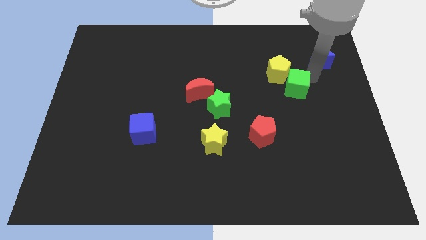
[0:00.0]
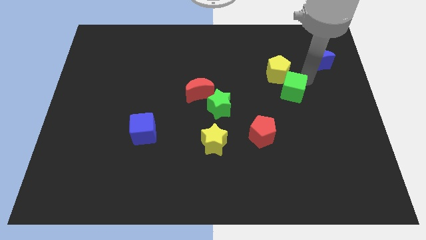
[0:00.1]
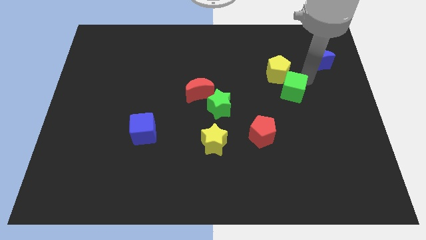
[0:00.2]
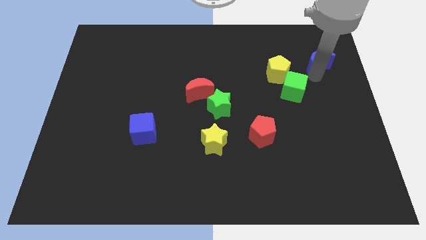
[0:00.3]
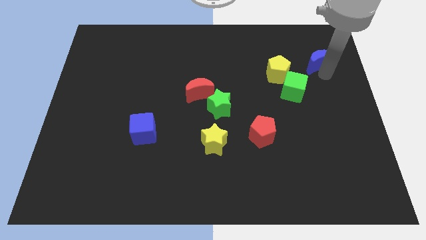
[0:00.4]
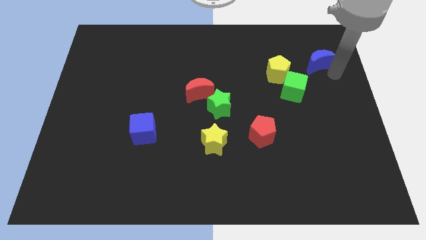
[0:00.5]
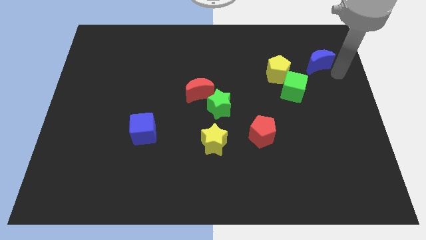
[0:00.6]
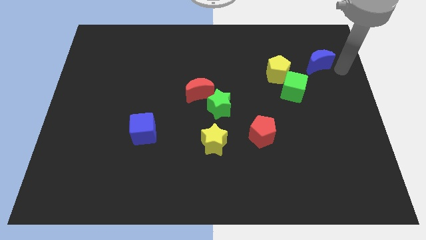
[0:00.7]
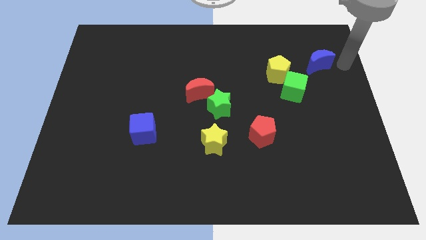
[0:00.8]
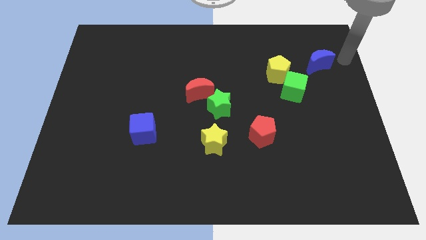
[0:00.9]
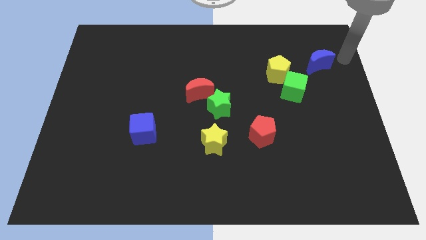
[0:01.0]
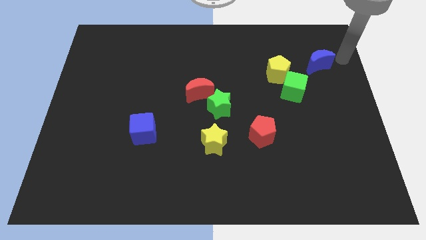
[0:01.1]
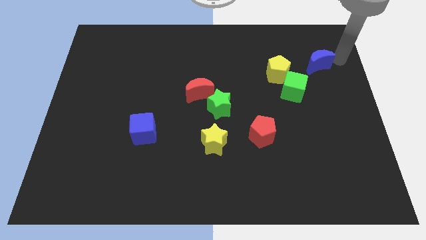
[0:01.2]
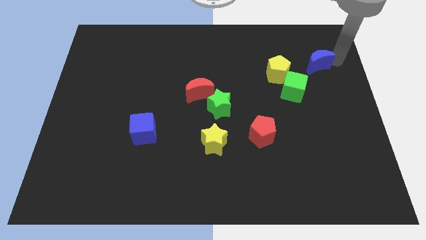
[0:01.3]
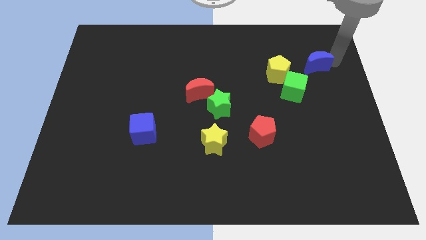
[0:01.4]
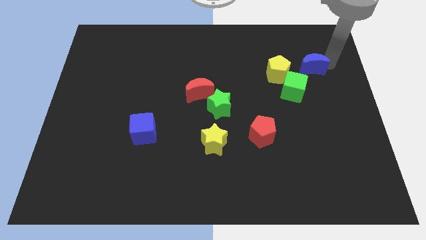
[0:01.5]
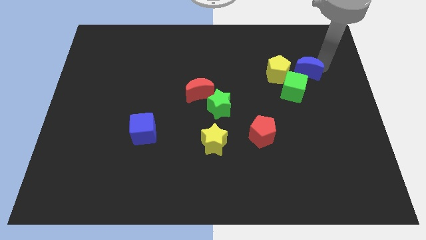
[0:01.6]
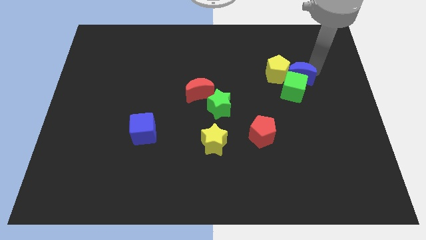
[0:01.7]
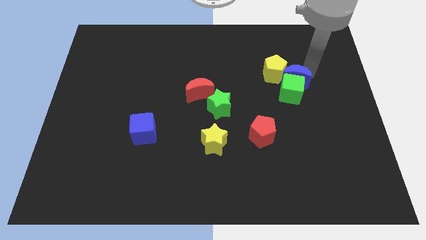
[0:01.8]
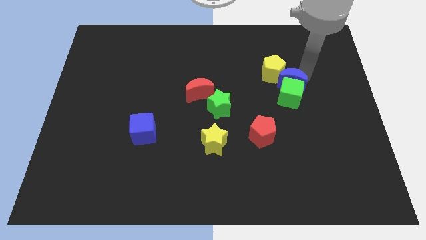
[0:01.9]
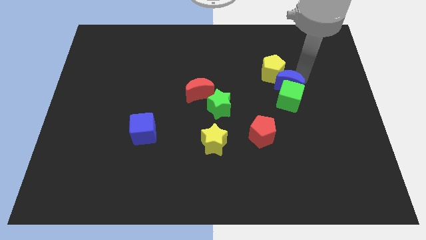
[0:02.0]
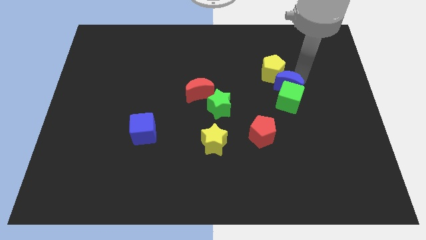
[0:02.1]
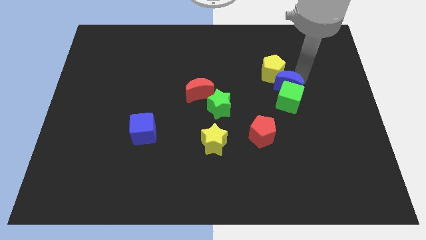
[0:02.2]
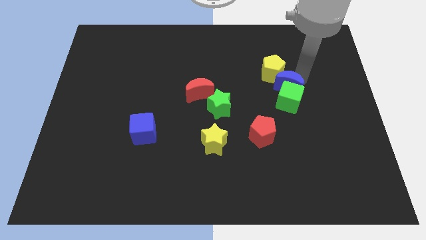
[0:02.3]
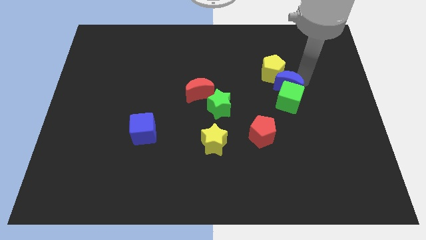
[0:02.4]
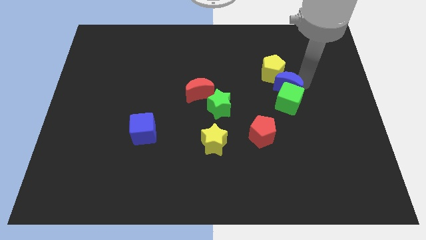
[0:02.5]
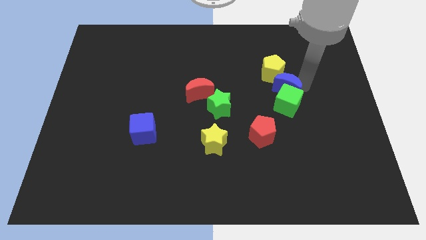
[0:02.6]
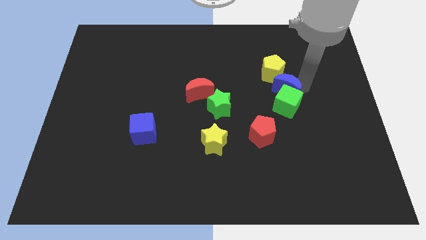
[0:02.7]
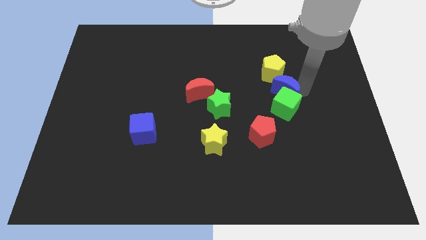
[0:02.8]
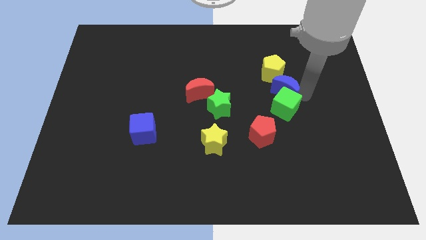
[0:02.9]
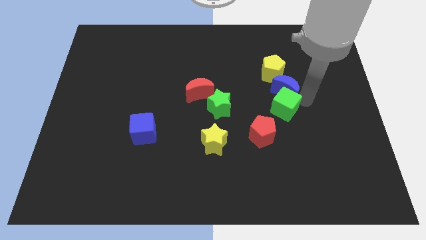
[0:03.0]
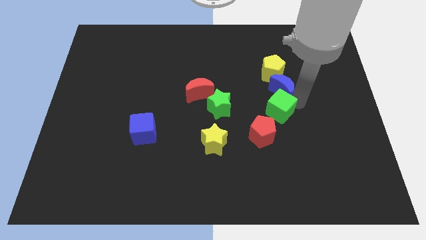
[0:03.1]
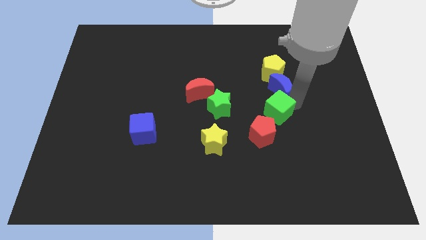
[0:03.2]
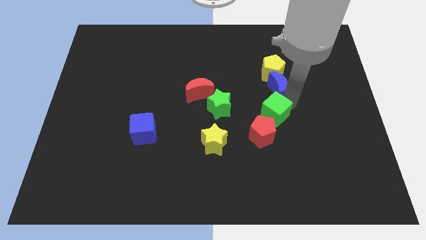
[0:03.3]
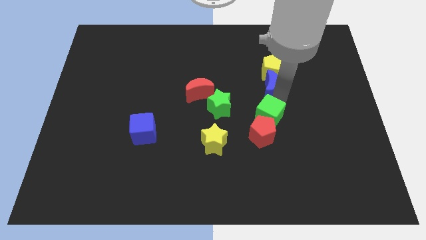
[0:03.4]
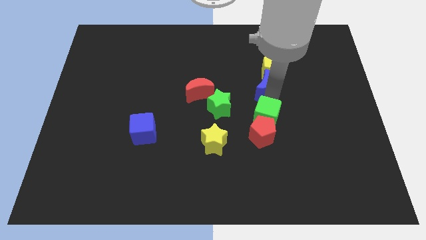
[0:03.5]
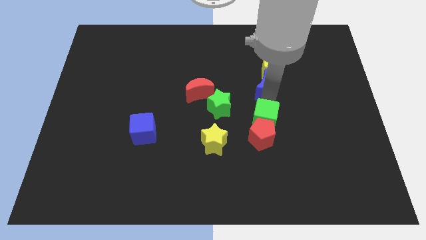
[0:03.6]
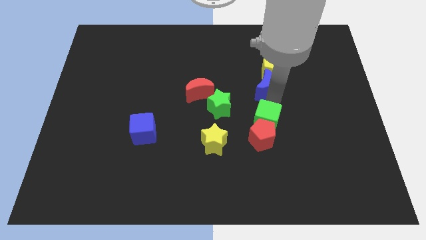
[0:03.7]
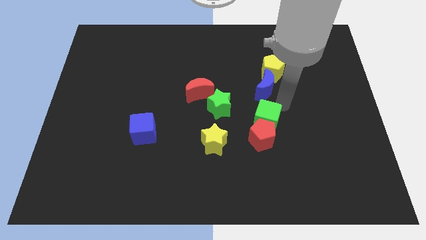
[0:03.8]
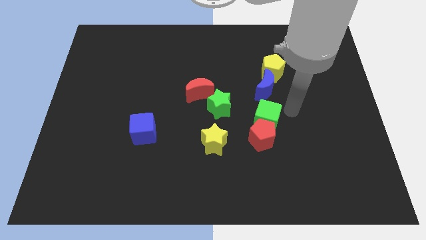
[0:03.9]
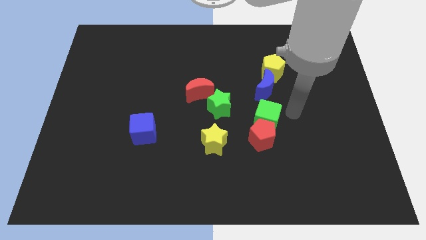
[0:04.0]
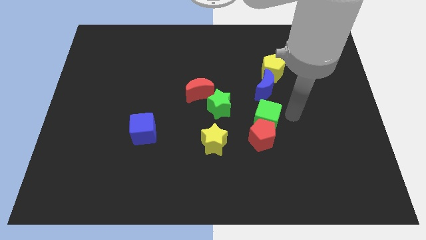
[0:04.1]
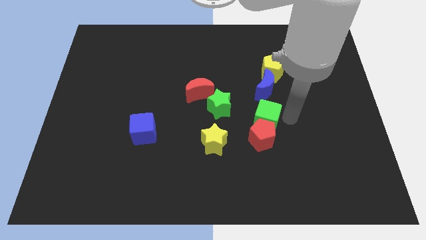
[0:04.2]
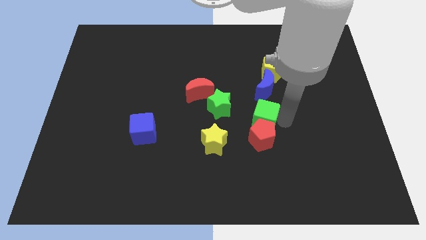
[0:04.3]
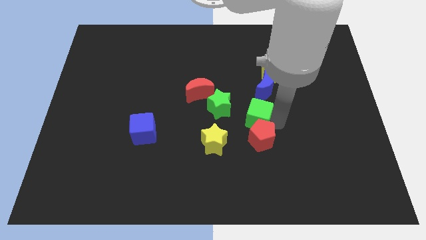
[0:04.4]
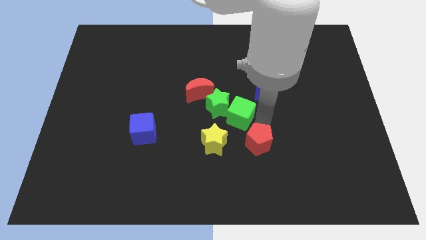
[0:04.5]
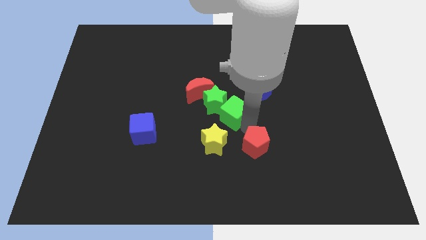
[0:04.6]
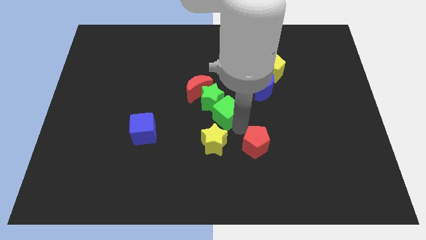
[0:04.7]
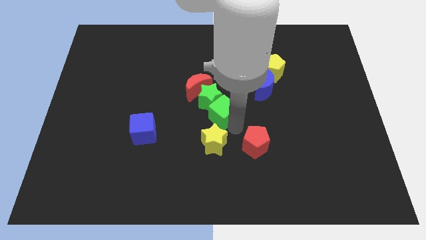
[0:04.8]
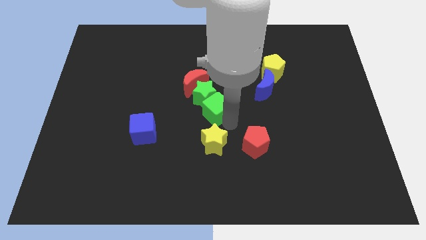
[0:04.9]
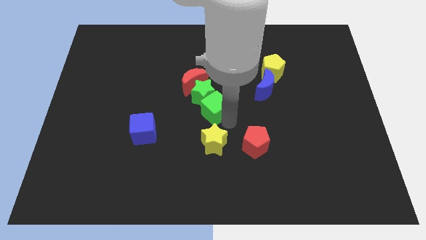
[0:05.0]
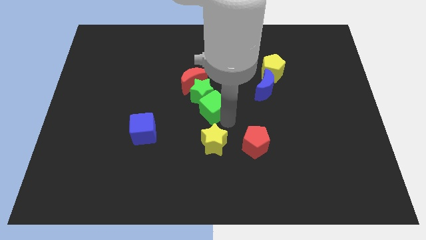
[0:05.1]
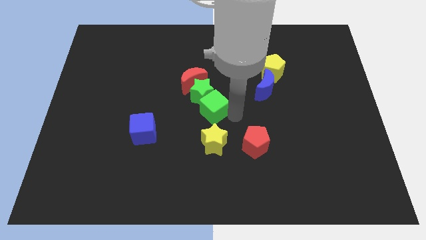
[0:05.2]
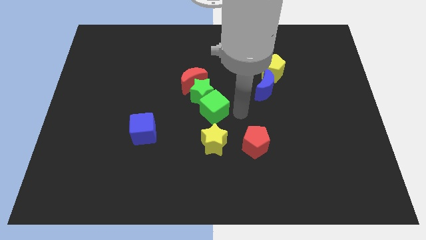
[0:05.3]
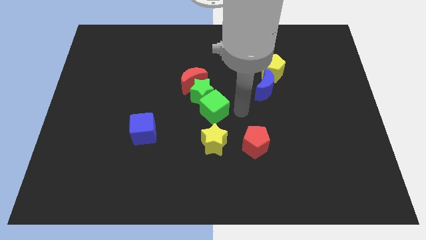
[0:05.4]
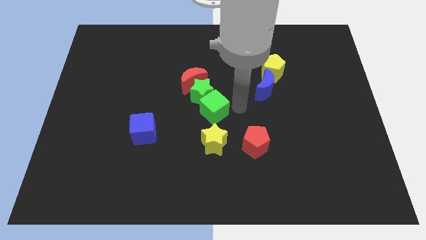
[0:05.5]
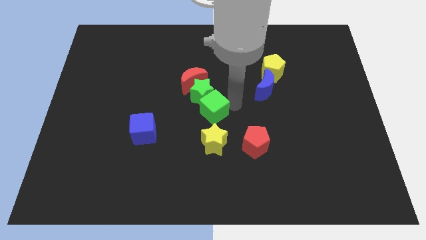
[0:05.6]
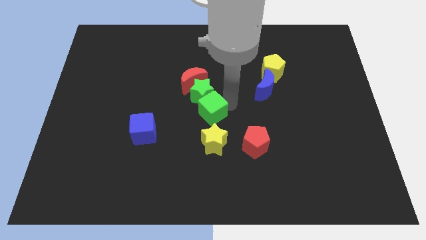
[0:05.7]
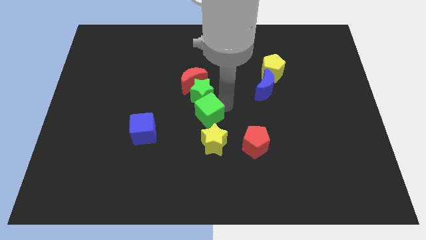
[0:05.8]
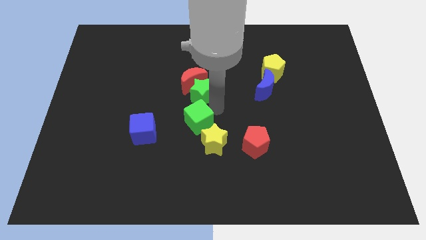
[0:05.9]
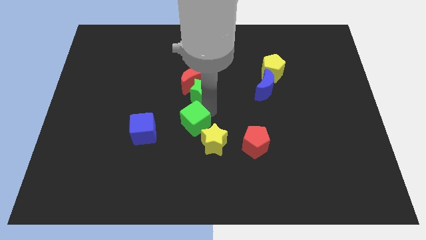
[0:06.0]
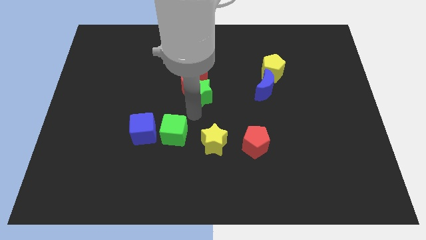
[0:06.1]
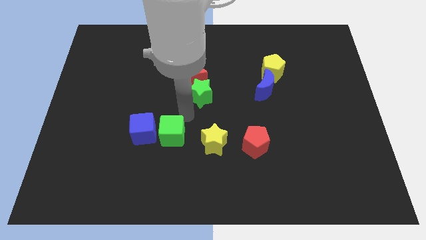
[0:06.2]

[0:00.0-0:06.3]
place the green cube right to the blue cube

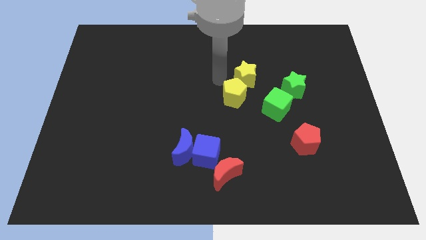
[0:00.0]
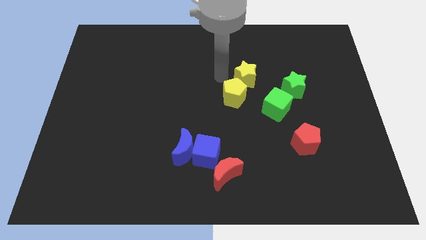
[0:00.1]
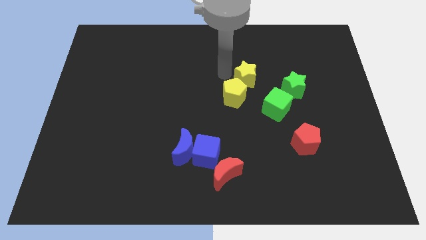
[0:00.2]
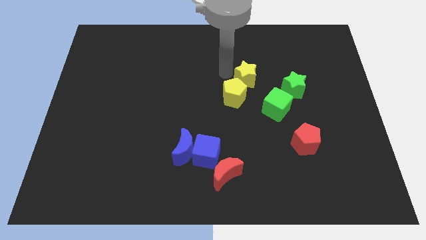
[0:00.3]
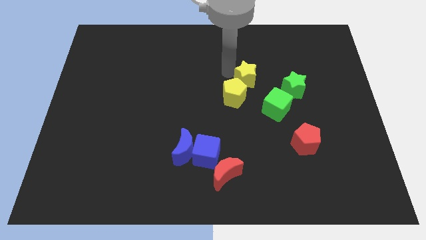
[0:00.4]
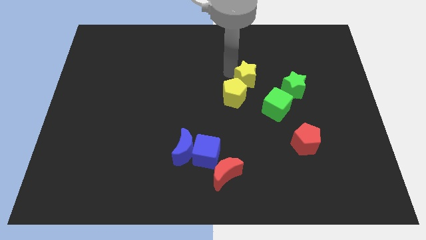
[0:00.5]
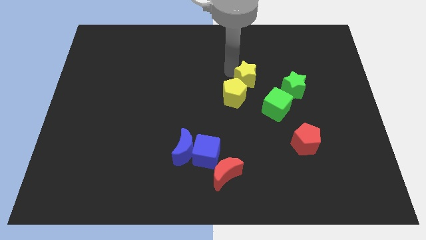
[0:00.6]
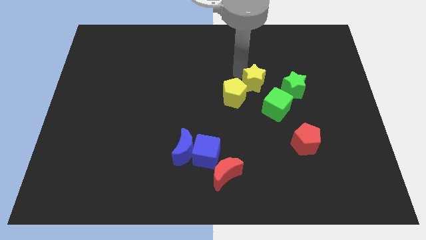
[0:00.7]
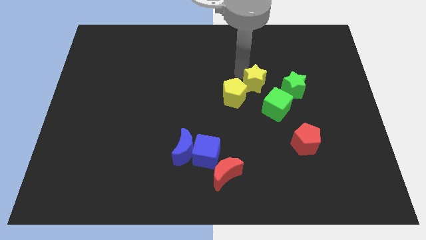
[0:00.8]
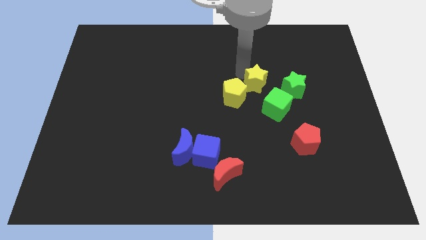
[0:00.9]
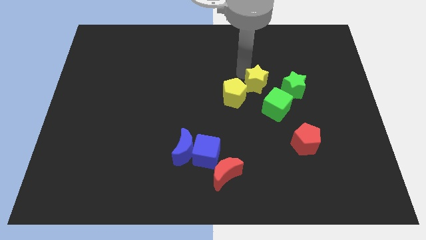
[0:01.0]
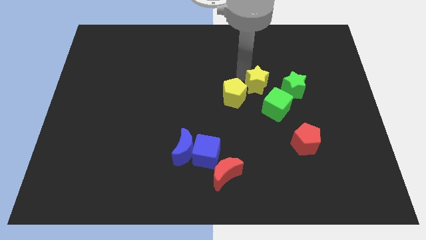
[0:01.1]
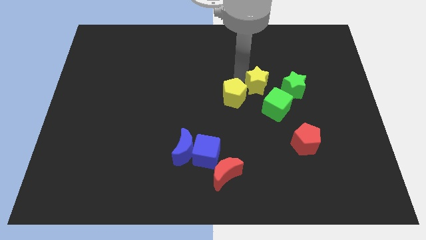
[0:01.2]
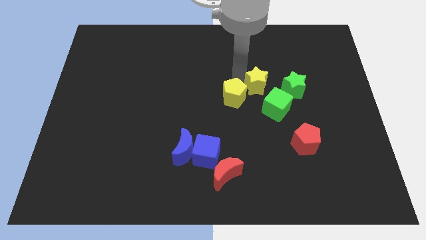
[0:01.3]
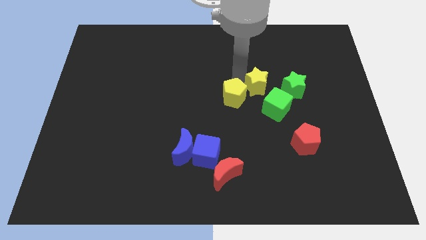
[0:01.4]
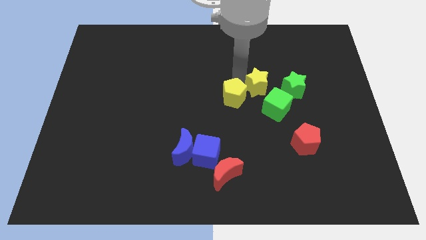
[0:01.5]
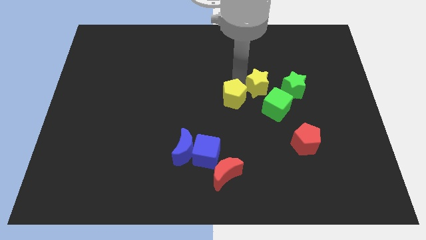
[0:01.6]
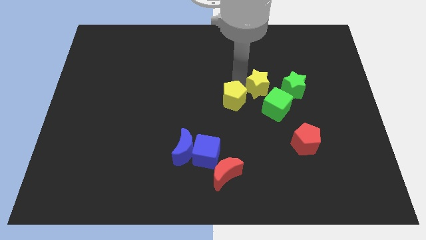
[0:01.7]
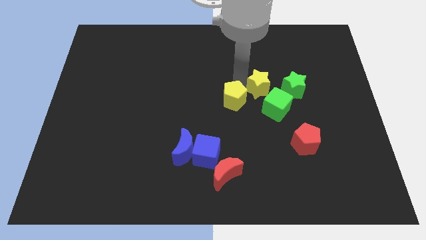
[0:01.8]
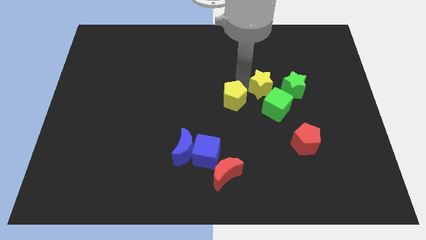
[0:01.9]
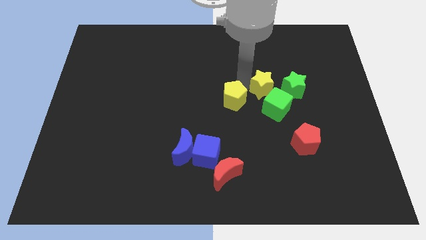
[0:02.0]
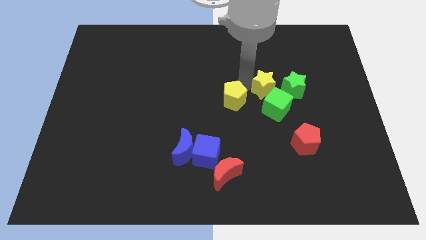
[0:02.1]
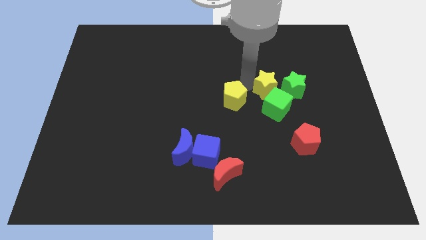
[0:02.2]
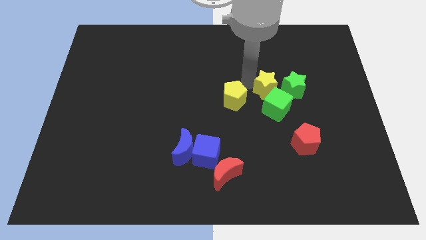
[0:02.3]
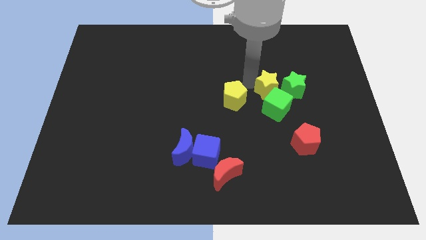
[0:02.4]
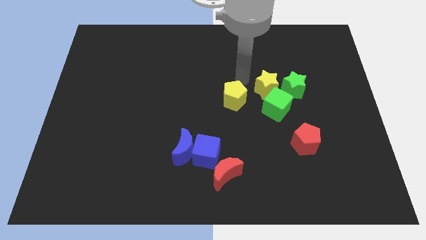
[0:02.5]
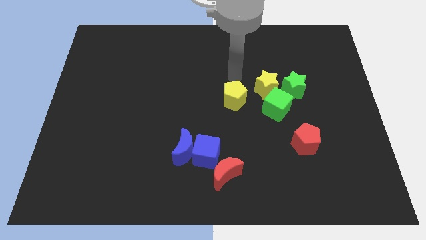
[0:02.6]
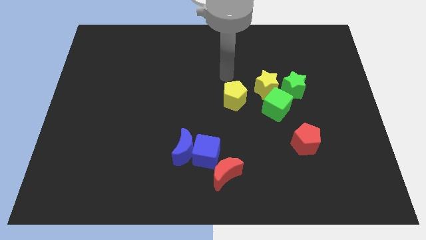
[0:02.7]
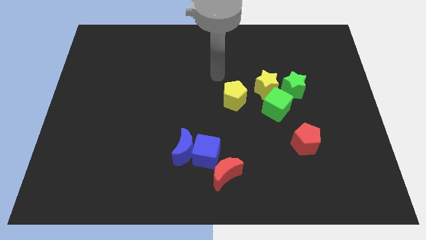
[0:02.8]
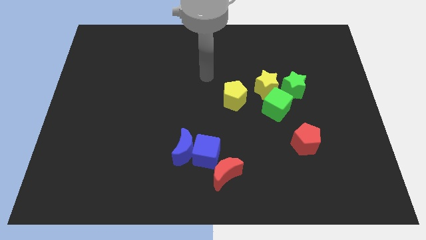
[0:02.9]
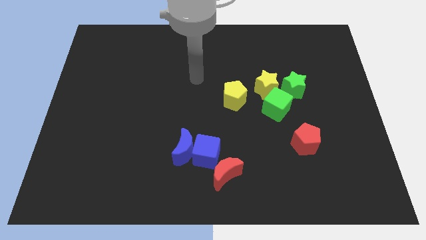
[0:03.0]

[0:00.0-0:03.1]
place yellow star to the left of green star
